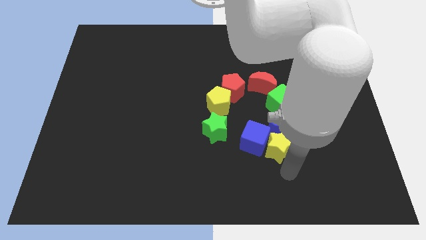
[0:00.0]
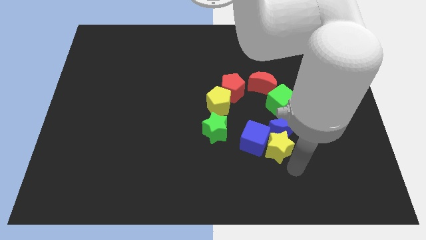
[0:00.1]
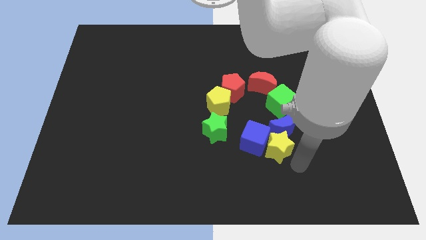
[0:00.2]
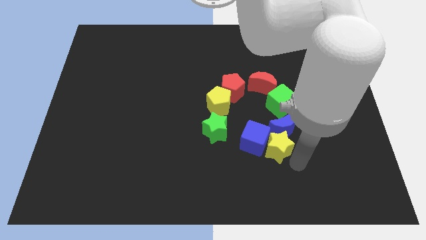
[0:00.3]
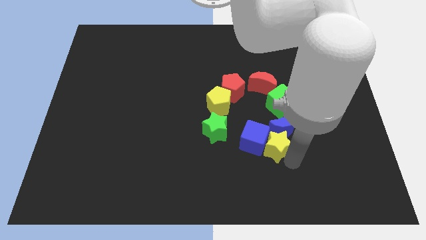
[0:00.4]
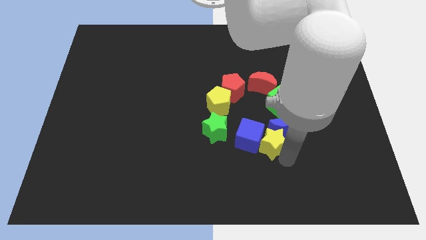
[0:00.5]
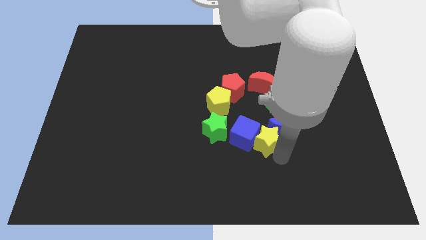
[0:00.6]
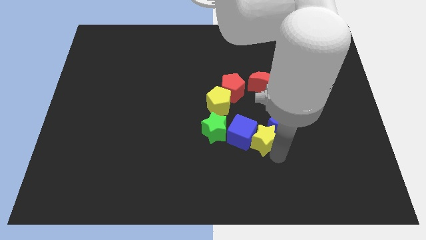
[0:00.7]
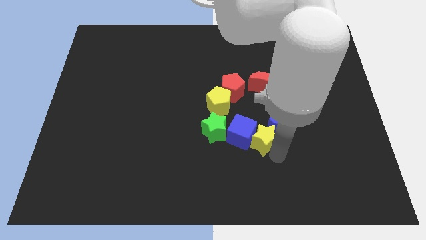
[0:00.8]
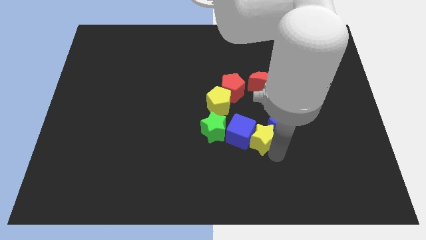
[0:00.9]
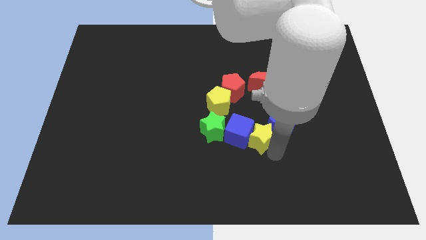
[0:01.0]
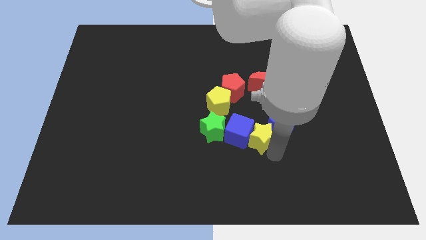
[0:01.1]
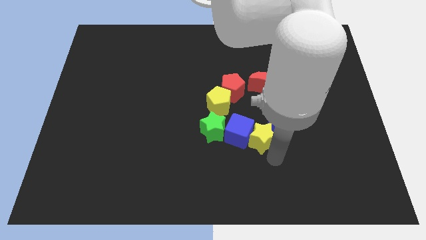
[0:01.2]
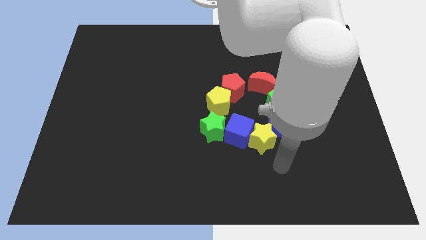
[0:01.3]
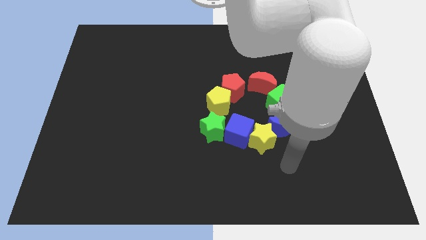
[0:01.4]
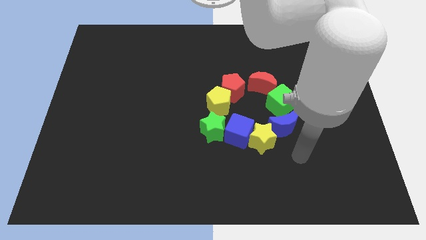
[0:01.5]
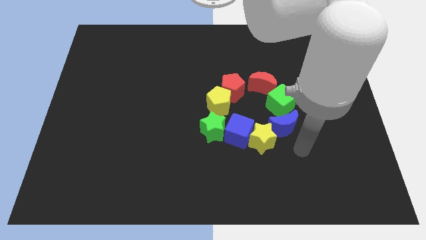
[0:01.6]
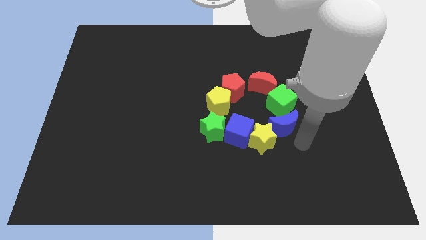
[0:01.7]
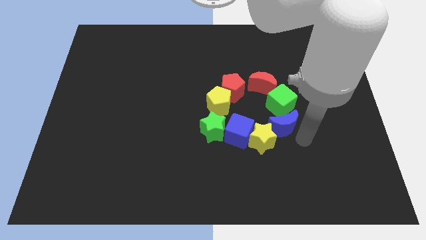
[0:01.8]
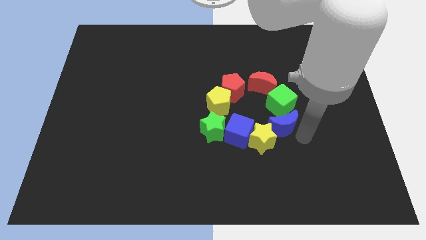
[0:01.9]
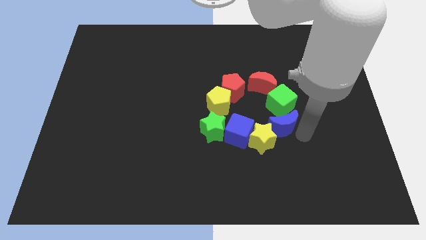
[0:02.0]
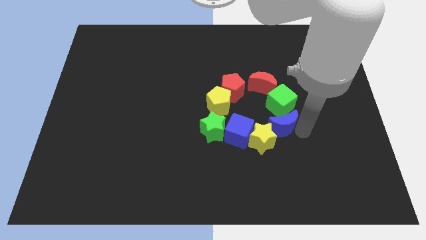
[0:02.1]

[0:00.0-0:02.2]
move yellow star and the blue cube towards green star

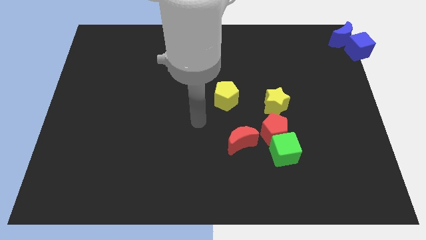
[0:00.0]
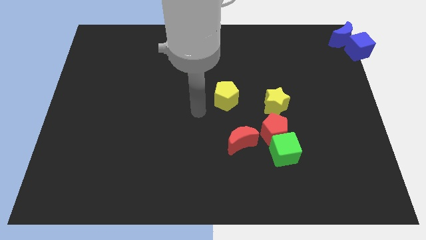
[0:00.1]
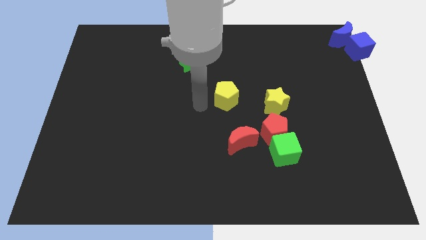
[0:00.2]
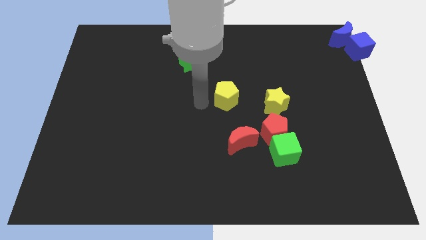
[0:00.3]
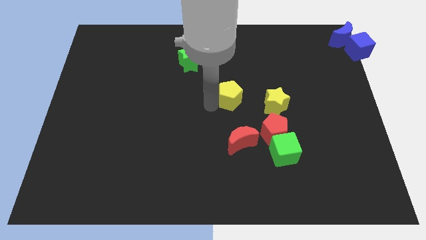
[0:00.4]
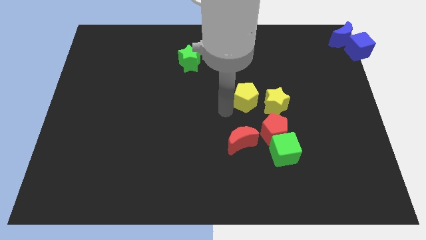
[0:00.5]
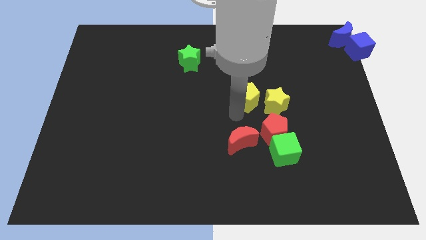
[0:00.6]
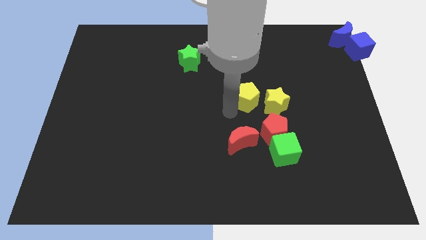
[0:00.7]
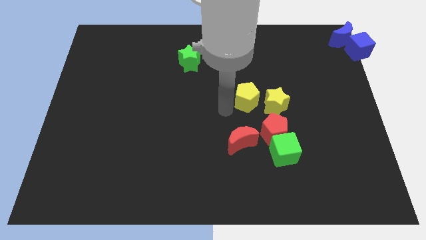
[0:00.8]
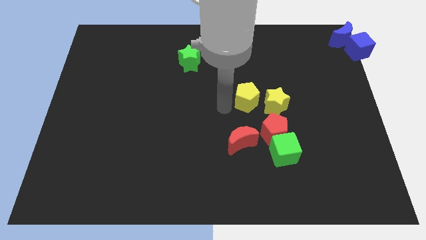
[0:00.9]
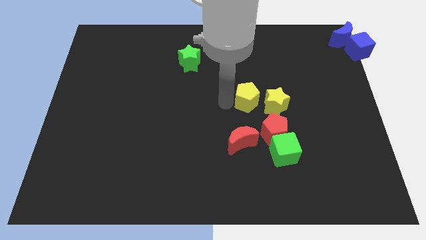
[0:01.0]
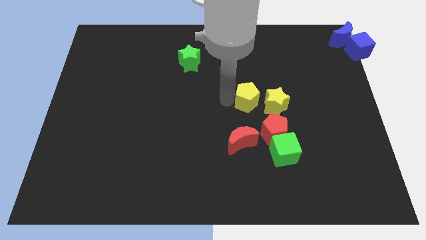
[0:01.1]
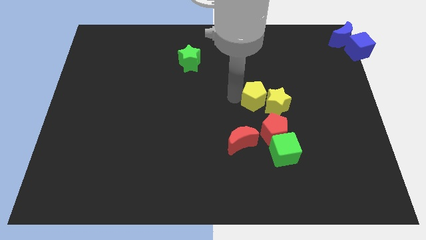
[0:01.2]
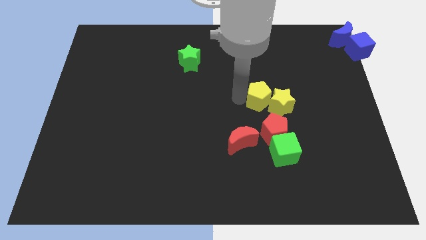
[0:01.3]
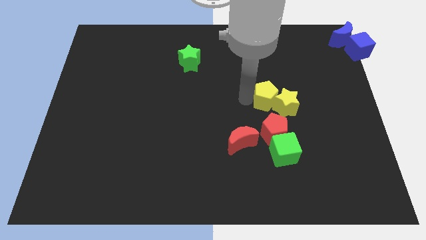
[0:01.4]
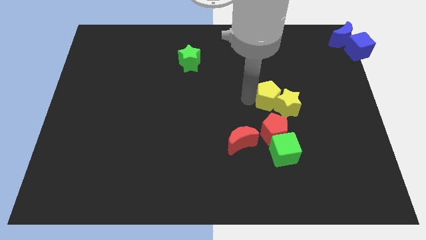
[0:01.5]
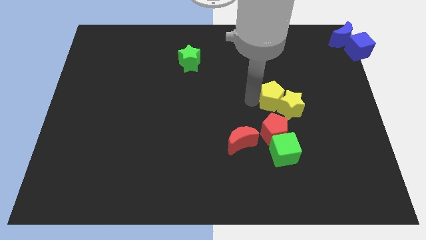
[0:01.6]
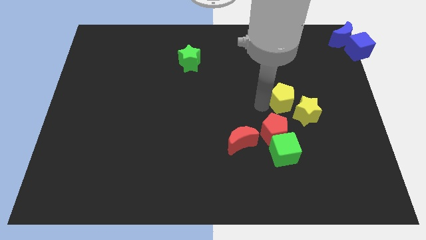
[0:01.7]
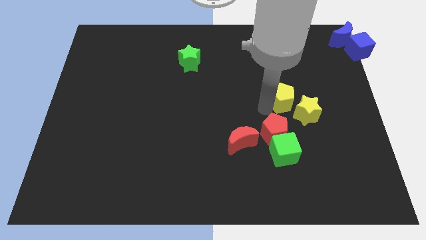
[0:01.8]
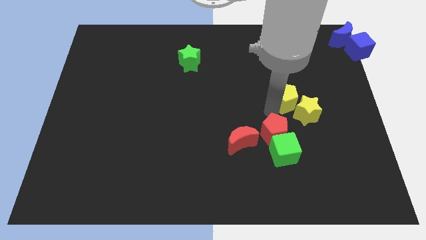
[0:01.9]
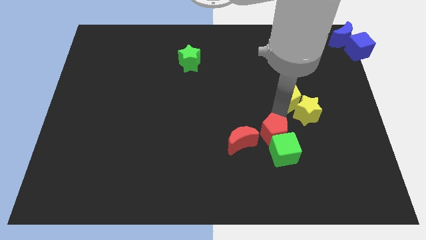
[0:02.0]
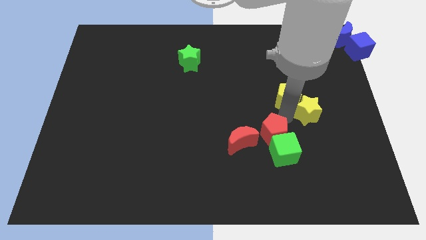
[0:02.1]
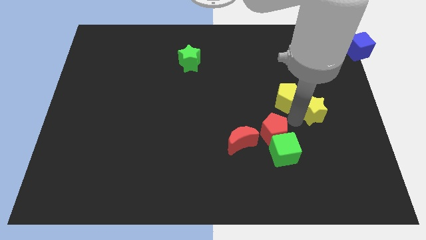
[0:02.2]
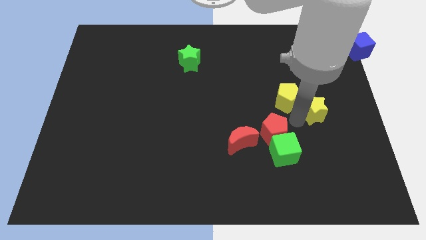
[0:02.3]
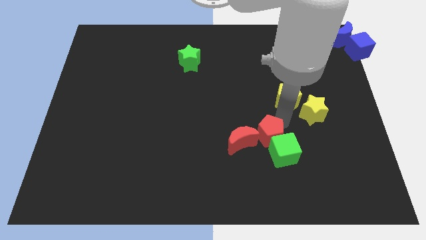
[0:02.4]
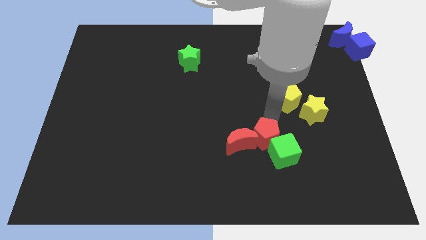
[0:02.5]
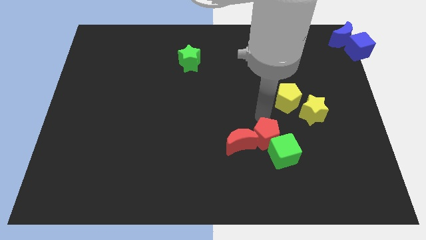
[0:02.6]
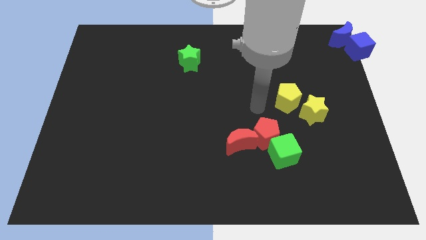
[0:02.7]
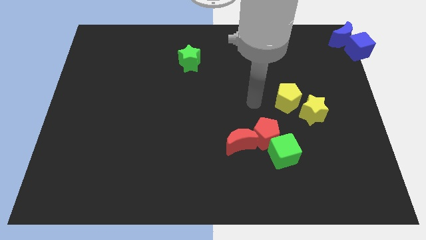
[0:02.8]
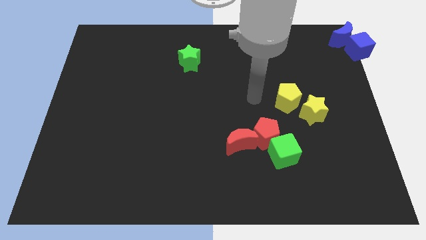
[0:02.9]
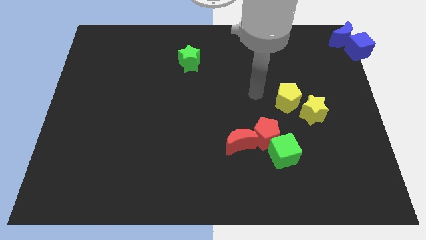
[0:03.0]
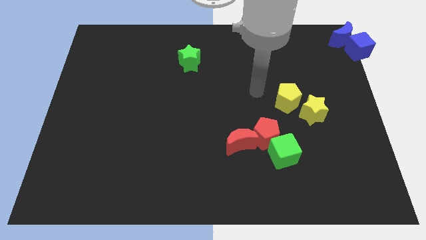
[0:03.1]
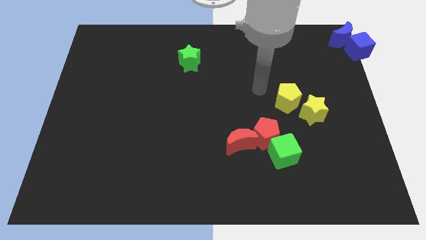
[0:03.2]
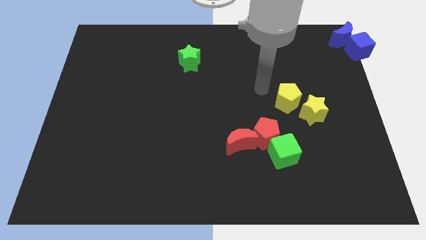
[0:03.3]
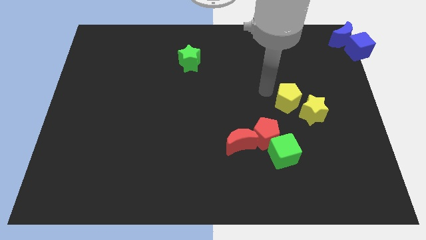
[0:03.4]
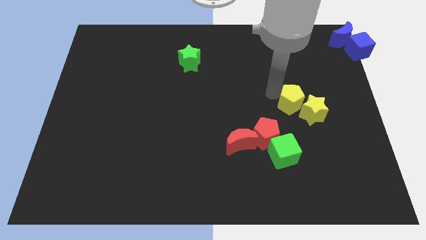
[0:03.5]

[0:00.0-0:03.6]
push the yellow pentagon along with the yellow star to the right center of the board

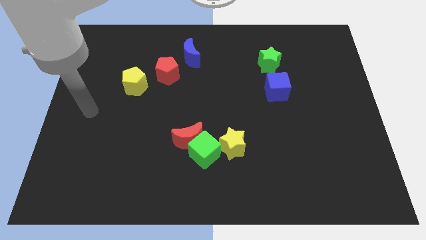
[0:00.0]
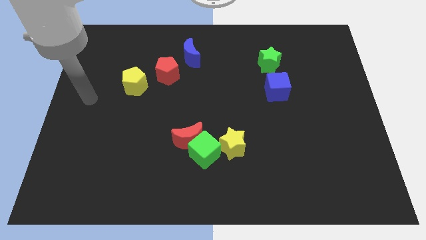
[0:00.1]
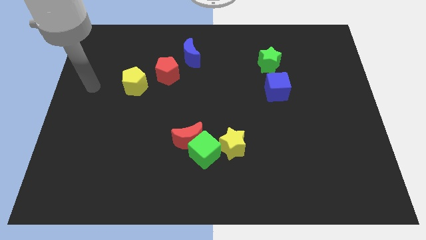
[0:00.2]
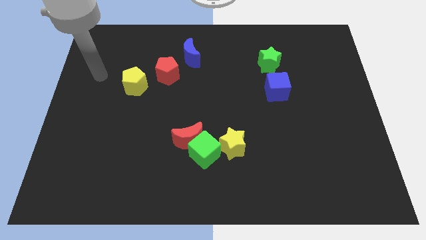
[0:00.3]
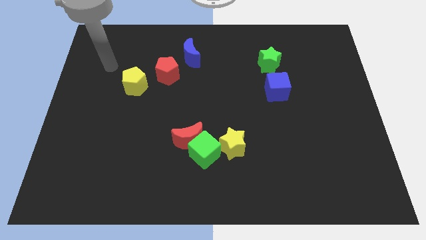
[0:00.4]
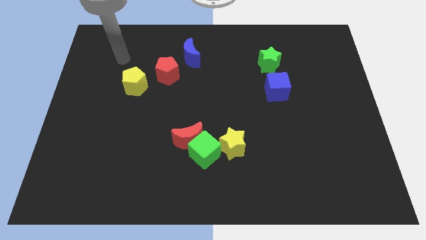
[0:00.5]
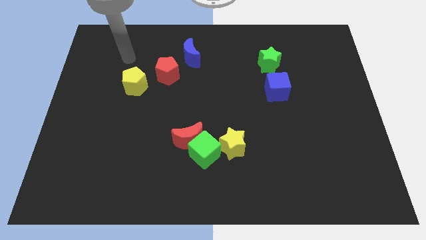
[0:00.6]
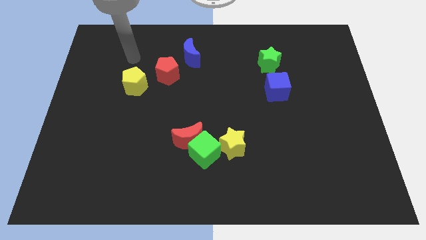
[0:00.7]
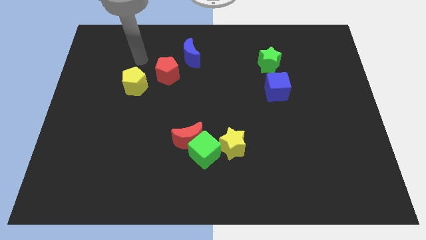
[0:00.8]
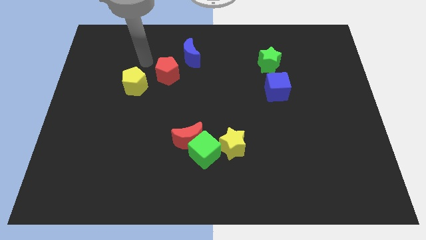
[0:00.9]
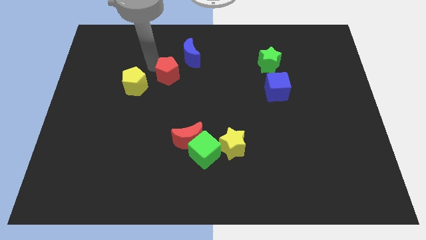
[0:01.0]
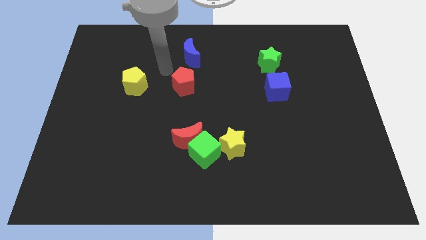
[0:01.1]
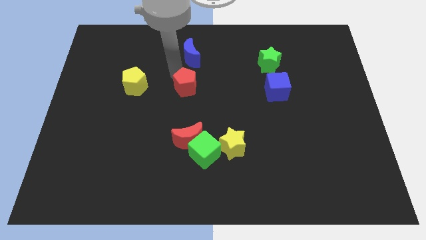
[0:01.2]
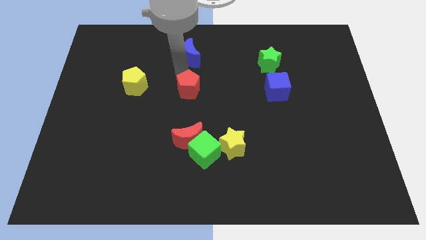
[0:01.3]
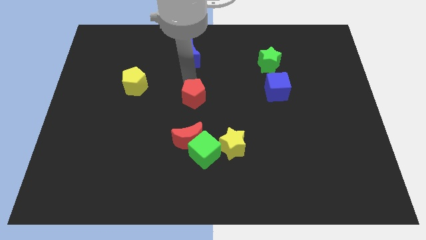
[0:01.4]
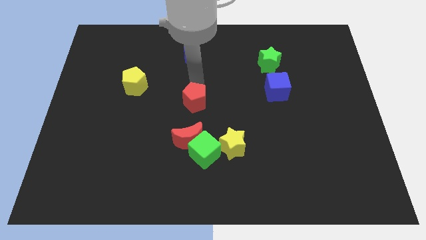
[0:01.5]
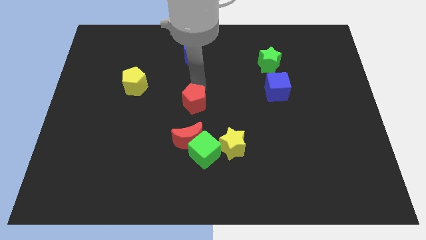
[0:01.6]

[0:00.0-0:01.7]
move your arm to the red pentagon

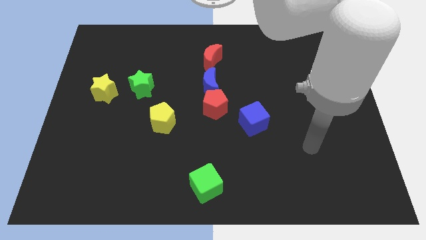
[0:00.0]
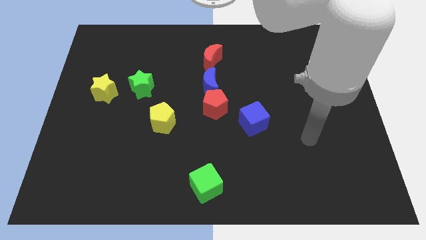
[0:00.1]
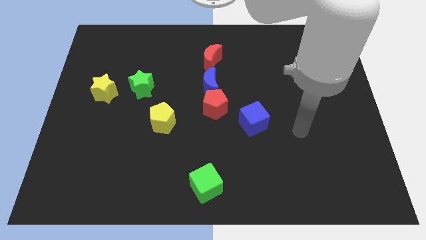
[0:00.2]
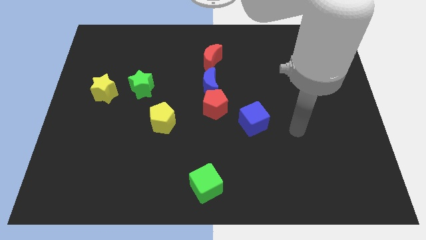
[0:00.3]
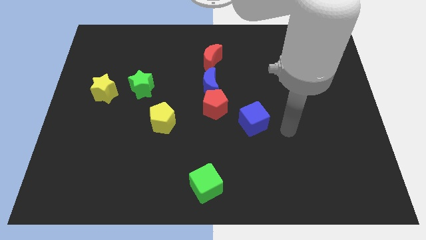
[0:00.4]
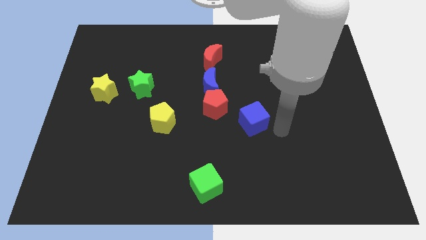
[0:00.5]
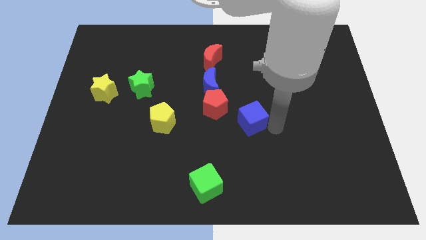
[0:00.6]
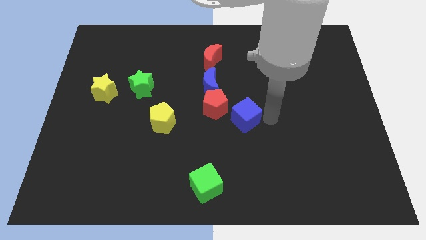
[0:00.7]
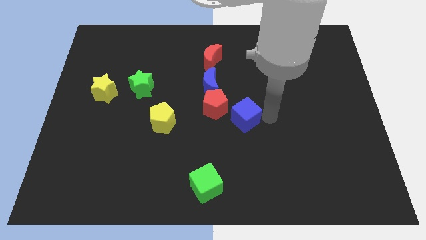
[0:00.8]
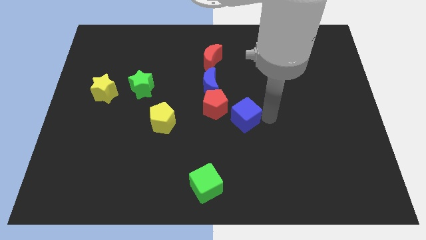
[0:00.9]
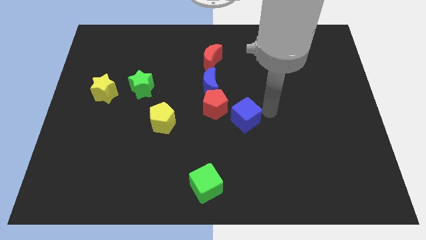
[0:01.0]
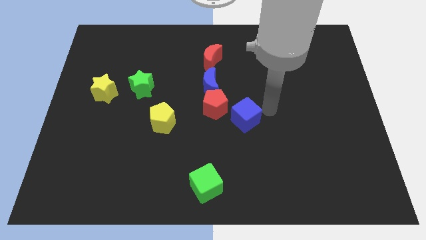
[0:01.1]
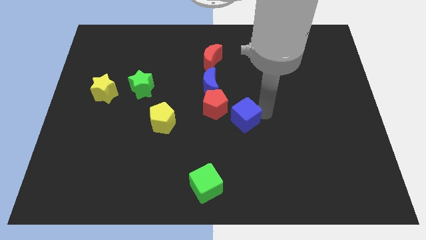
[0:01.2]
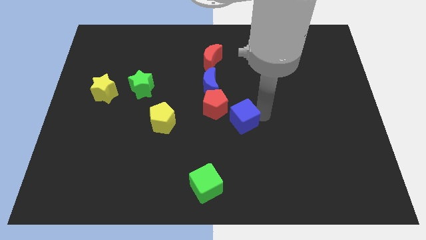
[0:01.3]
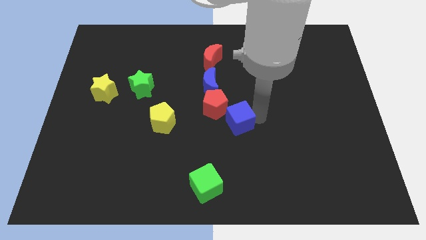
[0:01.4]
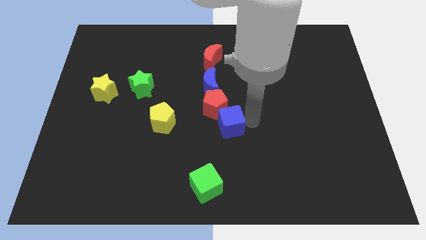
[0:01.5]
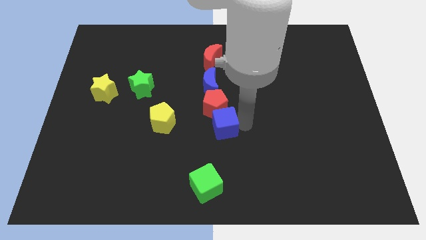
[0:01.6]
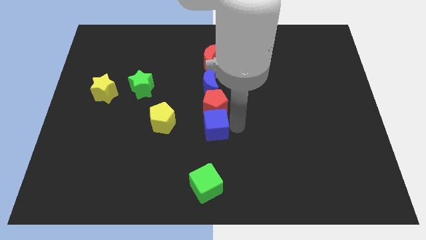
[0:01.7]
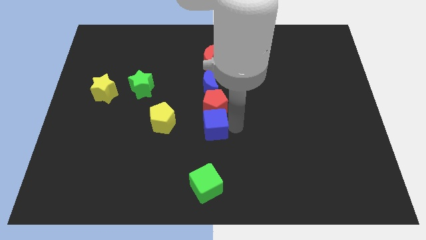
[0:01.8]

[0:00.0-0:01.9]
place the blue cube below the red pentagon
